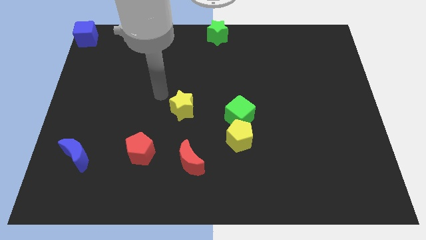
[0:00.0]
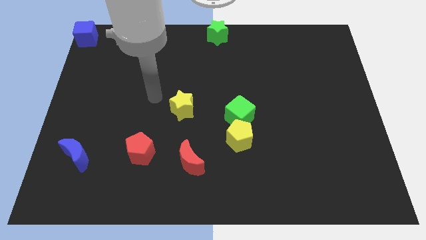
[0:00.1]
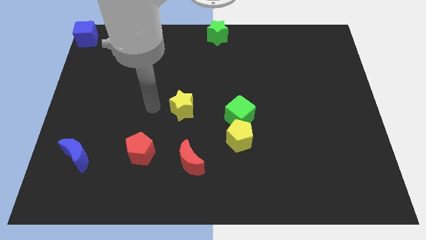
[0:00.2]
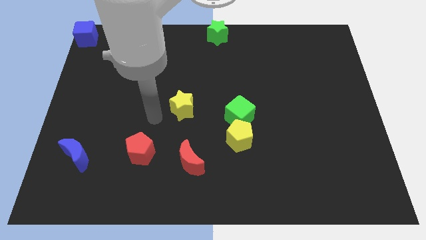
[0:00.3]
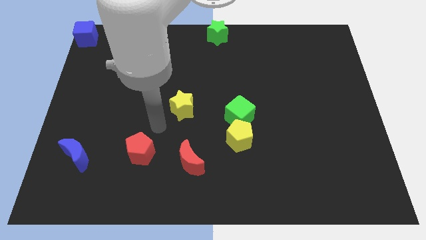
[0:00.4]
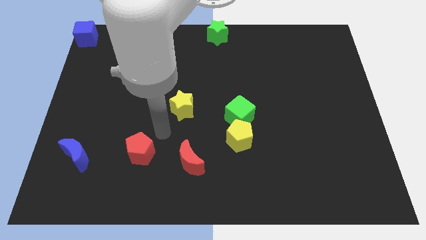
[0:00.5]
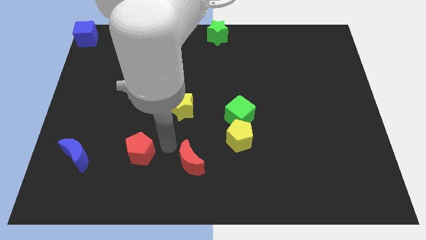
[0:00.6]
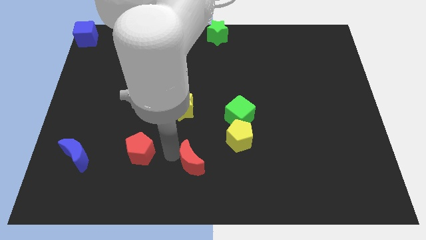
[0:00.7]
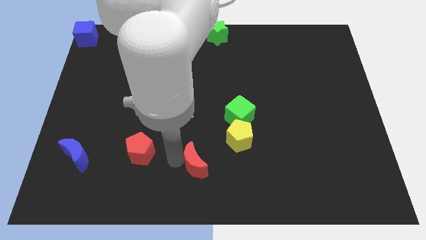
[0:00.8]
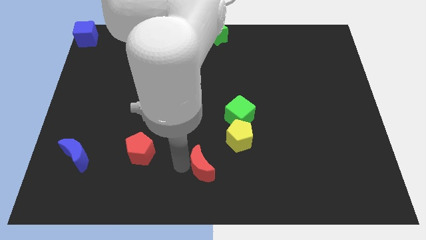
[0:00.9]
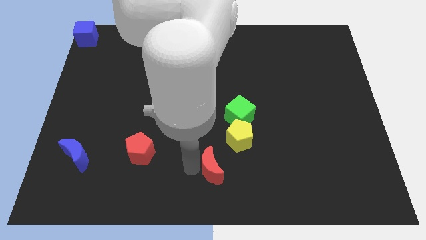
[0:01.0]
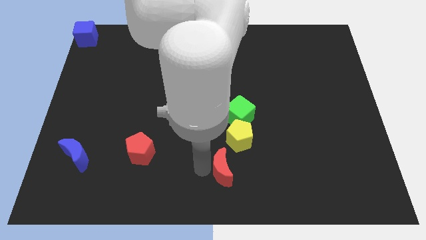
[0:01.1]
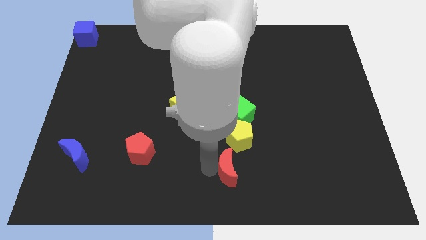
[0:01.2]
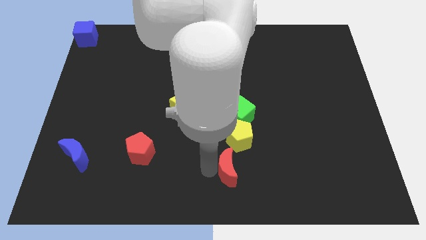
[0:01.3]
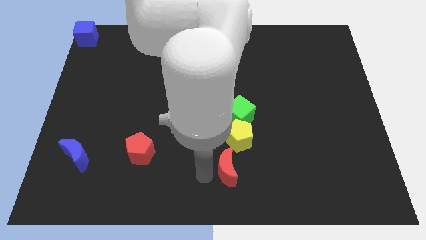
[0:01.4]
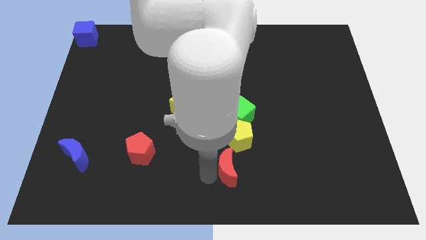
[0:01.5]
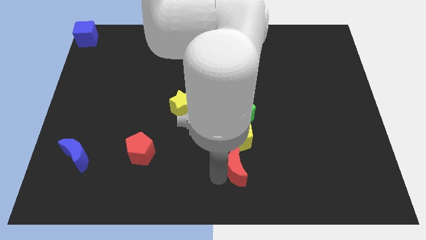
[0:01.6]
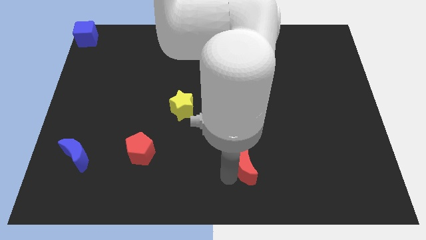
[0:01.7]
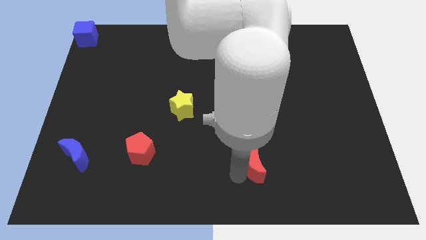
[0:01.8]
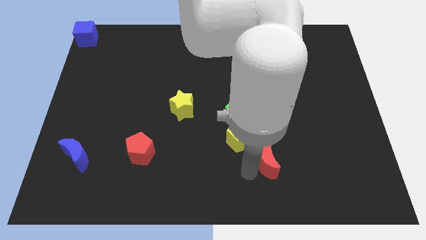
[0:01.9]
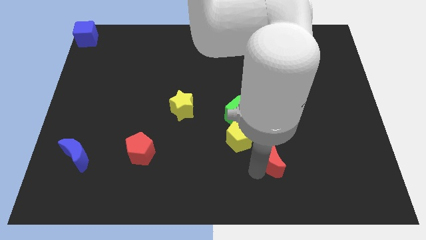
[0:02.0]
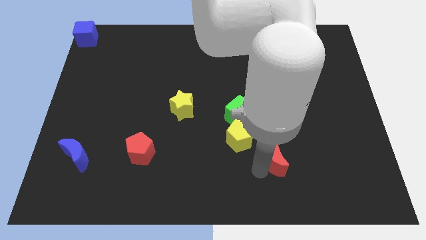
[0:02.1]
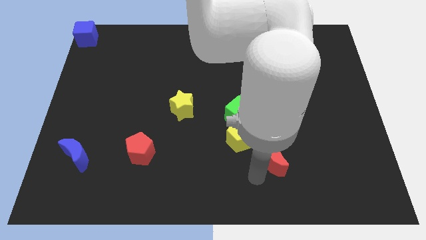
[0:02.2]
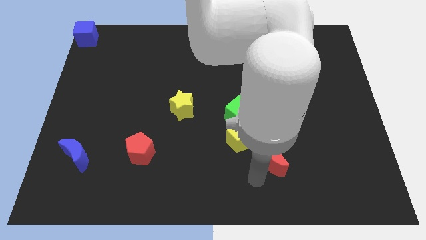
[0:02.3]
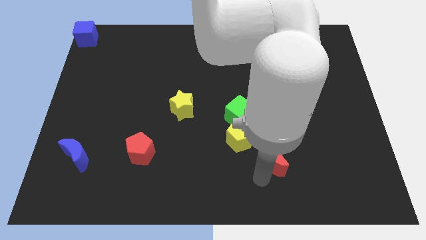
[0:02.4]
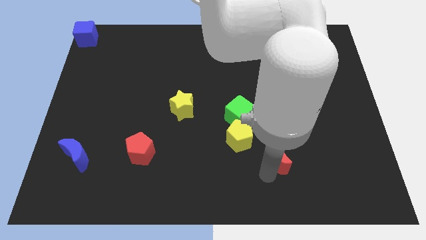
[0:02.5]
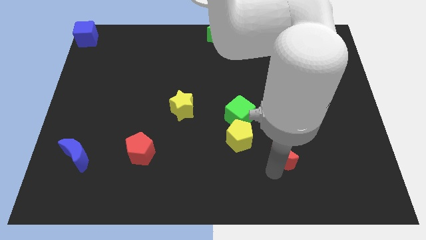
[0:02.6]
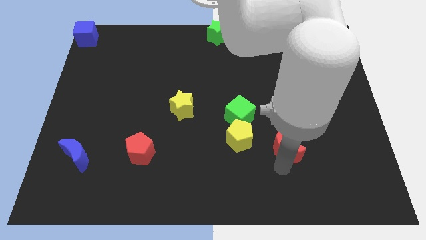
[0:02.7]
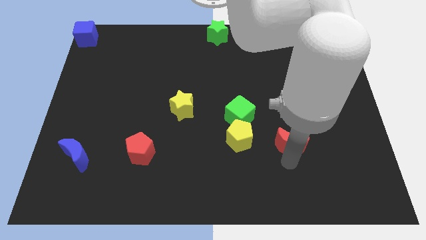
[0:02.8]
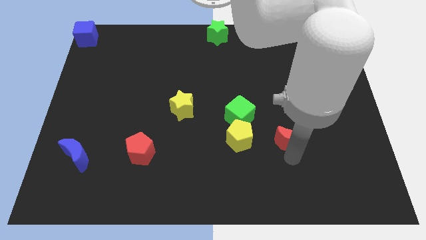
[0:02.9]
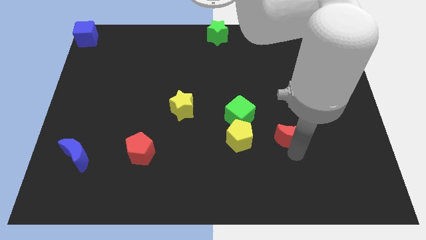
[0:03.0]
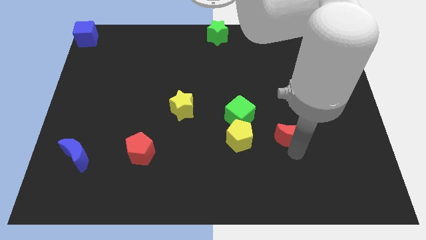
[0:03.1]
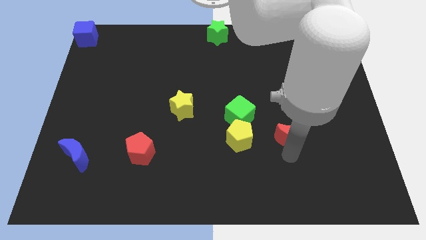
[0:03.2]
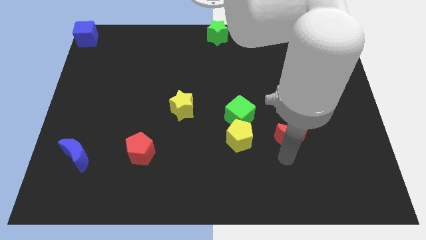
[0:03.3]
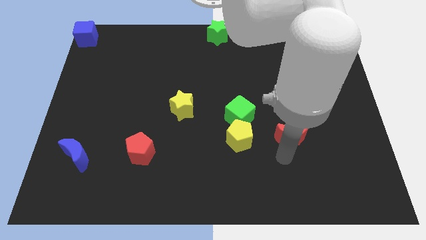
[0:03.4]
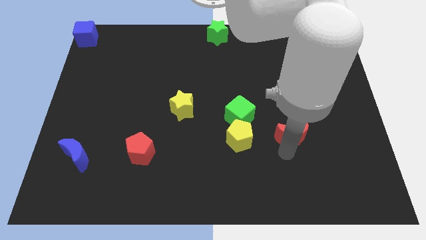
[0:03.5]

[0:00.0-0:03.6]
move the red moon towards the center right of the board

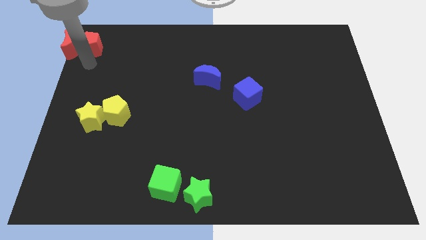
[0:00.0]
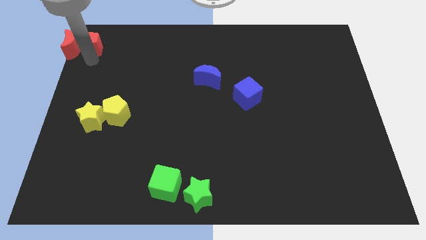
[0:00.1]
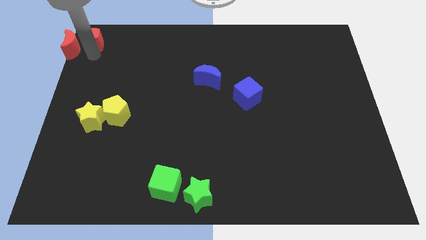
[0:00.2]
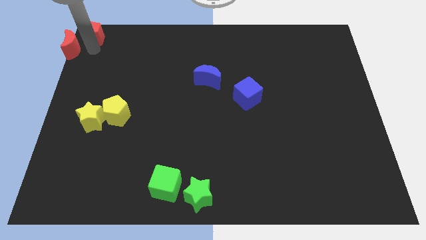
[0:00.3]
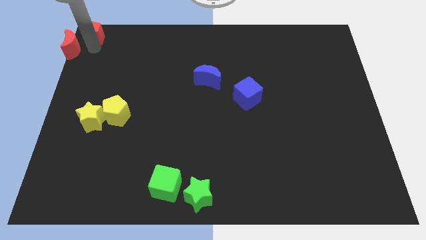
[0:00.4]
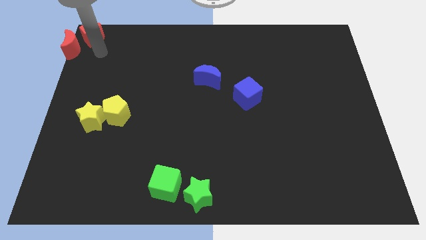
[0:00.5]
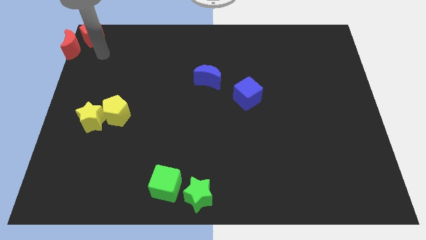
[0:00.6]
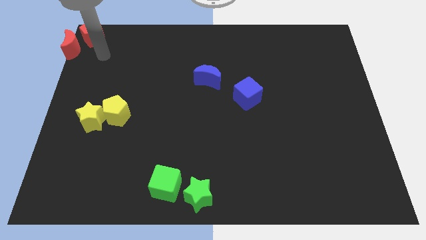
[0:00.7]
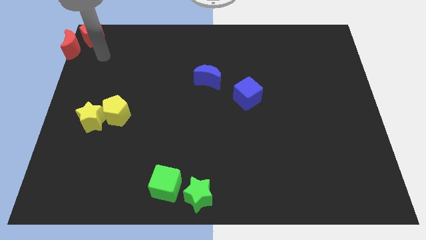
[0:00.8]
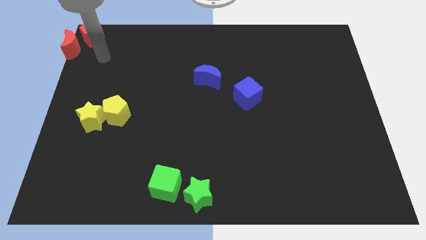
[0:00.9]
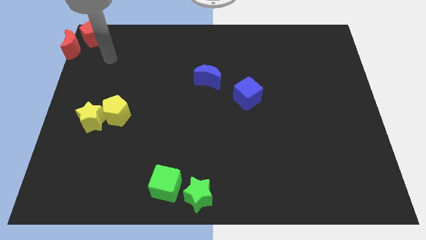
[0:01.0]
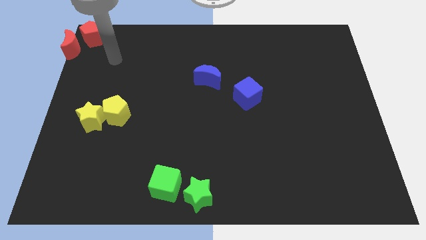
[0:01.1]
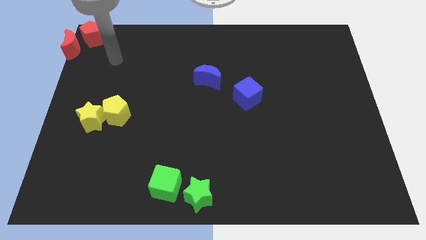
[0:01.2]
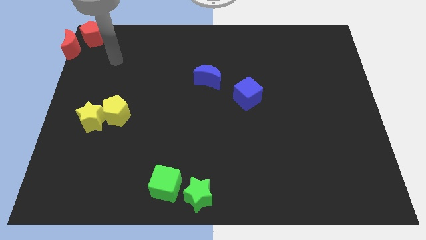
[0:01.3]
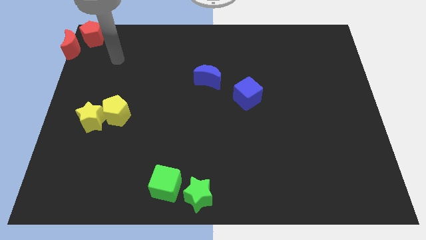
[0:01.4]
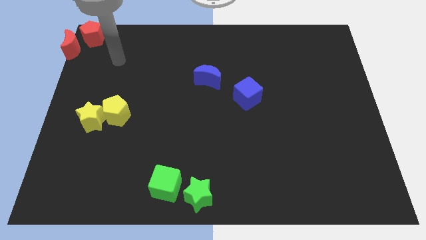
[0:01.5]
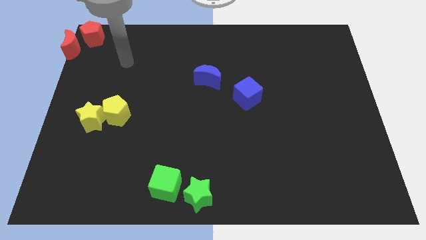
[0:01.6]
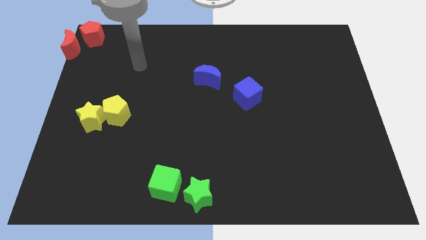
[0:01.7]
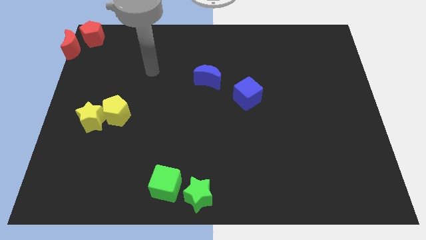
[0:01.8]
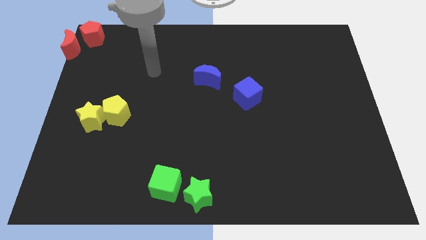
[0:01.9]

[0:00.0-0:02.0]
push red pentagon to the top left corner of the board

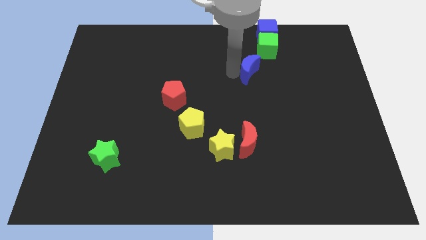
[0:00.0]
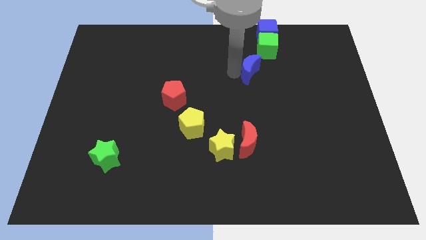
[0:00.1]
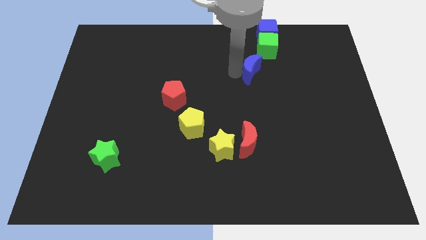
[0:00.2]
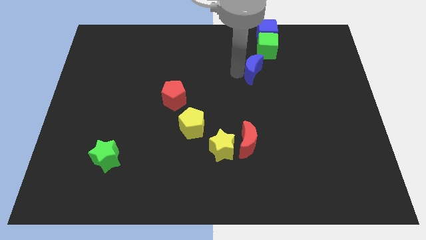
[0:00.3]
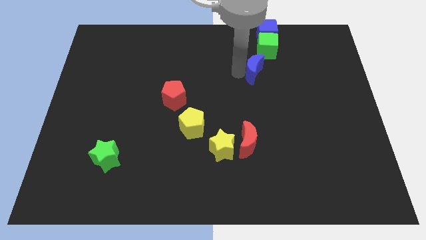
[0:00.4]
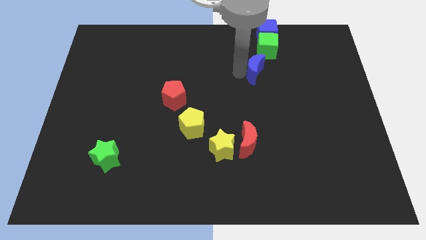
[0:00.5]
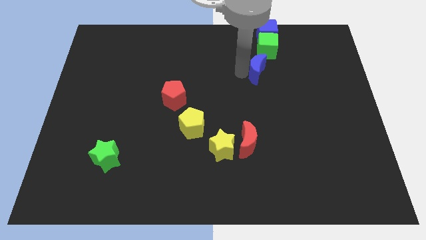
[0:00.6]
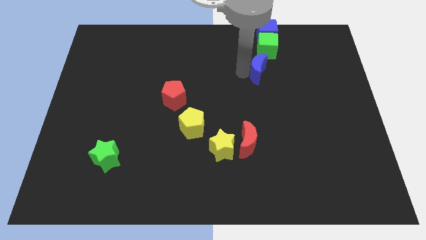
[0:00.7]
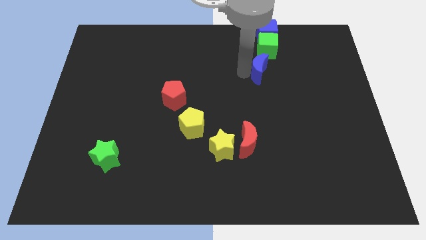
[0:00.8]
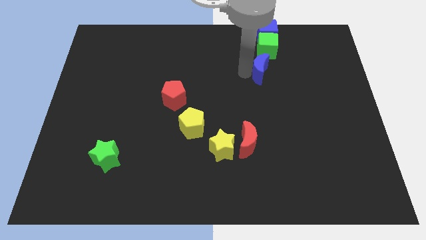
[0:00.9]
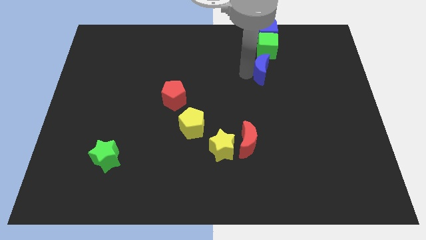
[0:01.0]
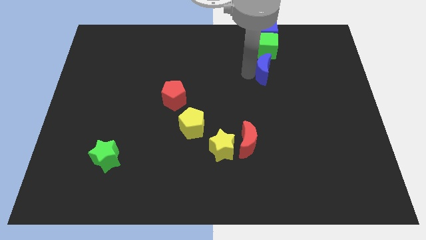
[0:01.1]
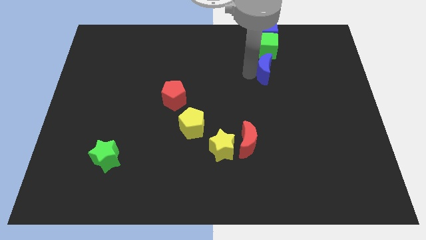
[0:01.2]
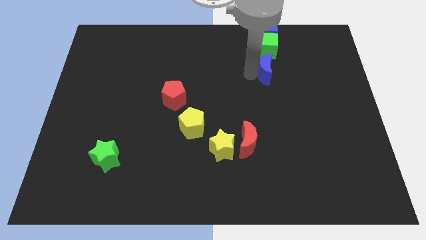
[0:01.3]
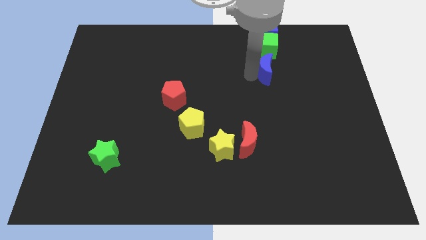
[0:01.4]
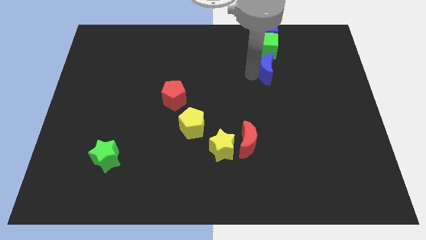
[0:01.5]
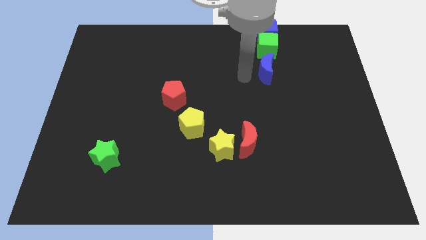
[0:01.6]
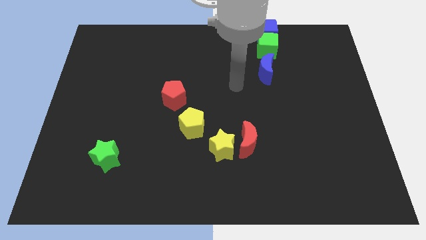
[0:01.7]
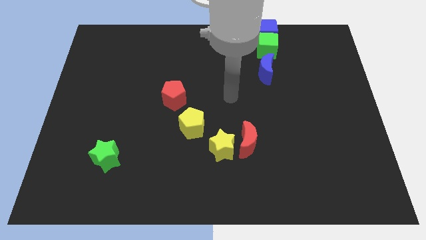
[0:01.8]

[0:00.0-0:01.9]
move the blue crescent slightly to the right

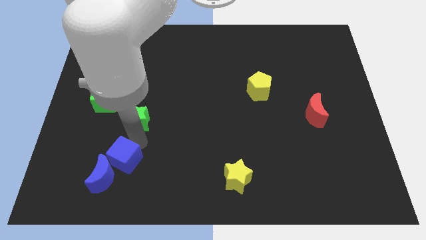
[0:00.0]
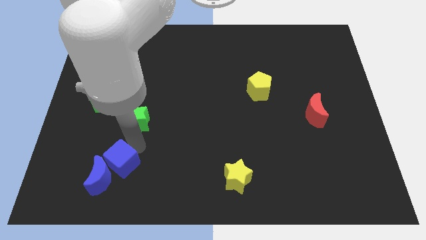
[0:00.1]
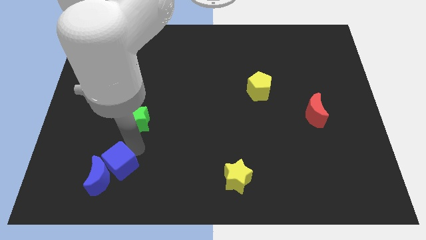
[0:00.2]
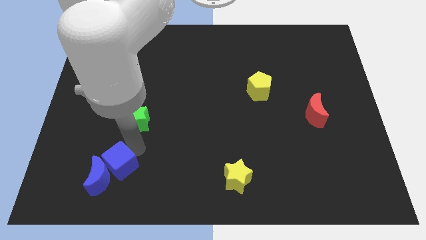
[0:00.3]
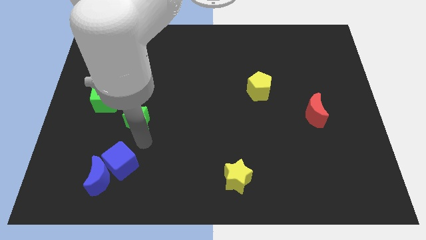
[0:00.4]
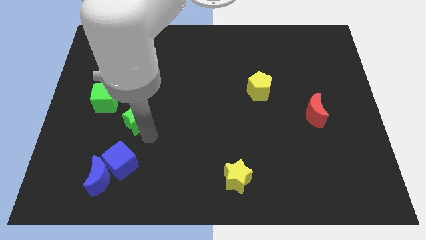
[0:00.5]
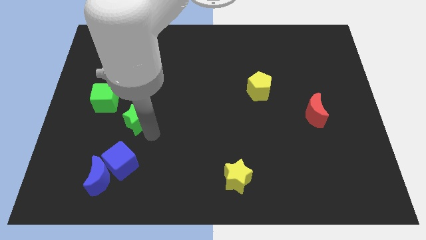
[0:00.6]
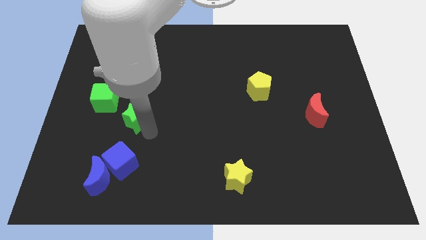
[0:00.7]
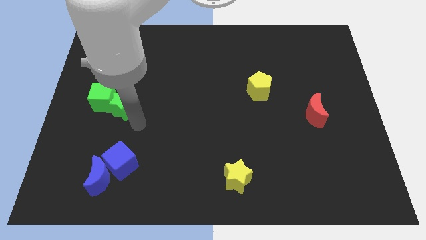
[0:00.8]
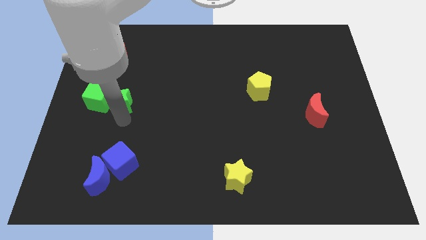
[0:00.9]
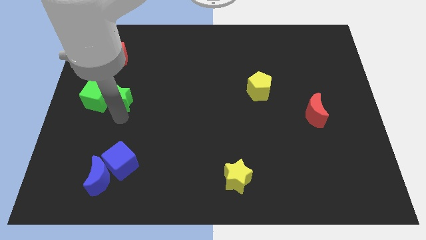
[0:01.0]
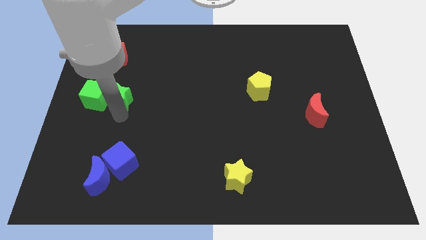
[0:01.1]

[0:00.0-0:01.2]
push the green star into the green cube

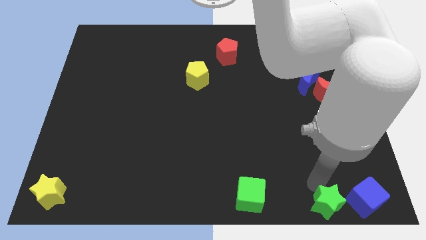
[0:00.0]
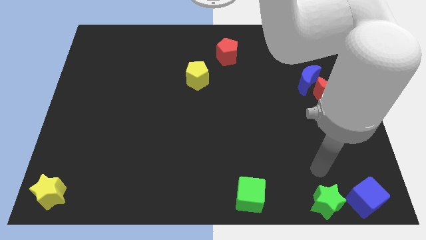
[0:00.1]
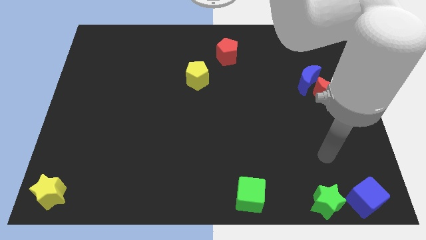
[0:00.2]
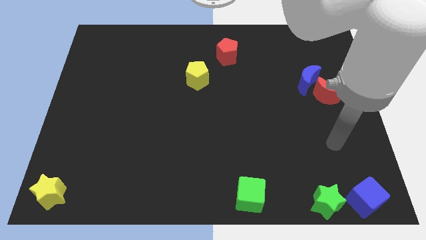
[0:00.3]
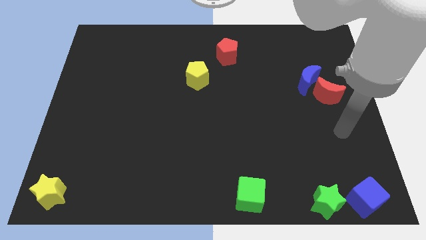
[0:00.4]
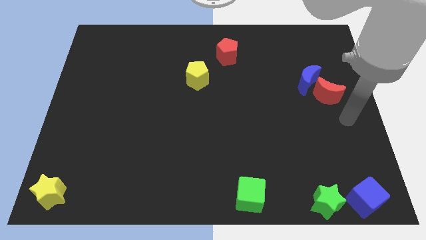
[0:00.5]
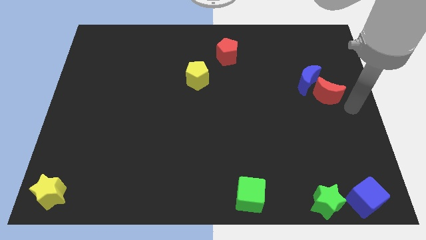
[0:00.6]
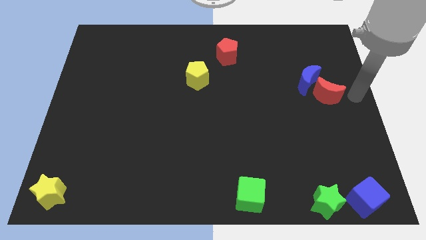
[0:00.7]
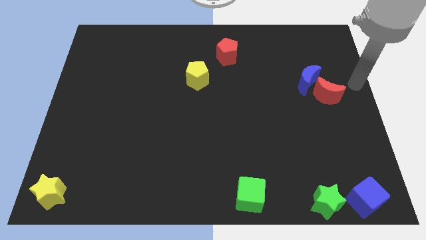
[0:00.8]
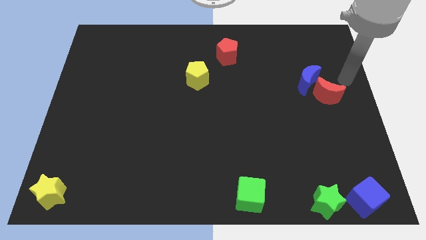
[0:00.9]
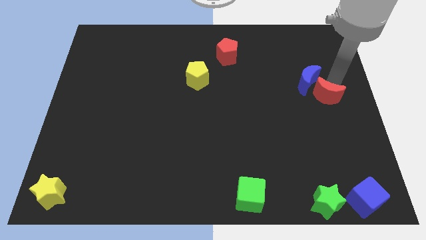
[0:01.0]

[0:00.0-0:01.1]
point the arm above the red moon
